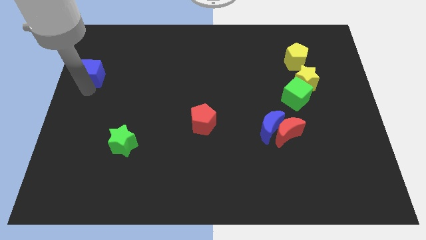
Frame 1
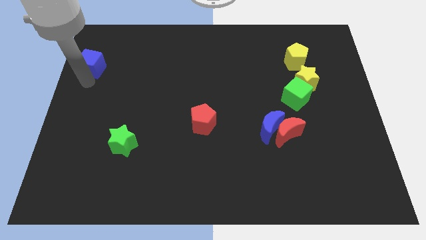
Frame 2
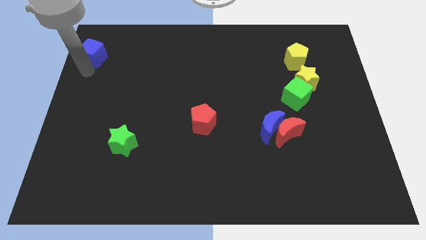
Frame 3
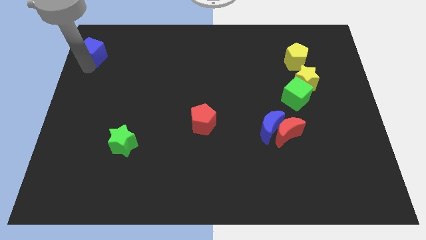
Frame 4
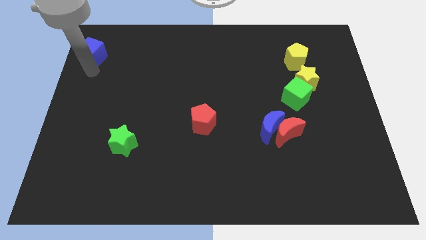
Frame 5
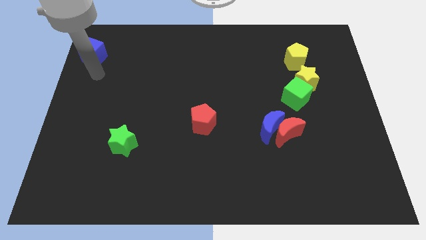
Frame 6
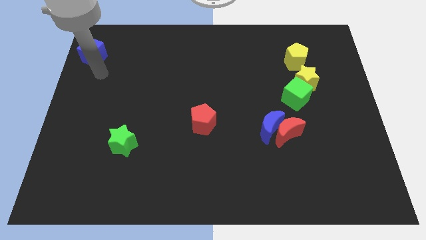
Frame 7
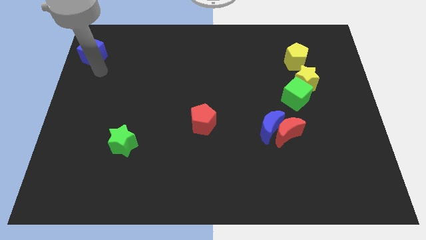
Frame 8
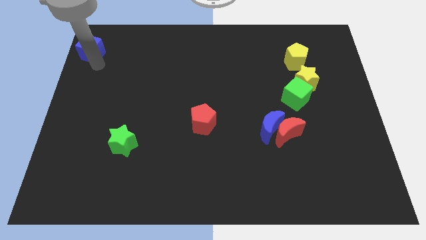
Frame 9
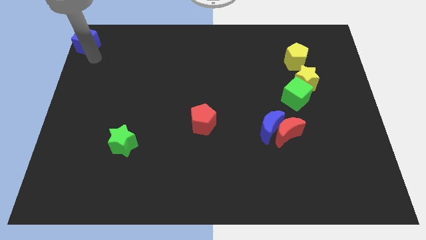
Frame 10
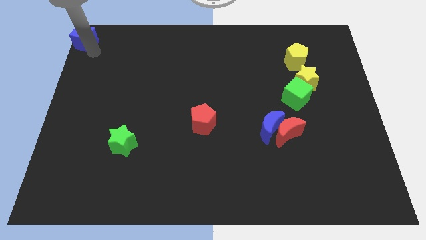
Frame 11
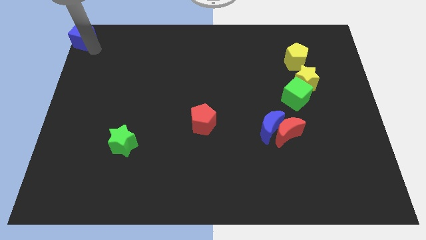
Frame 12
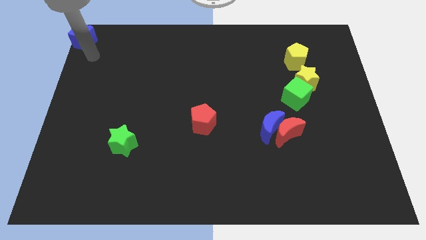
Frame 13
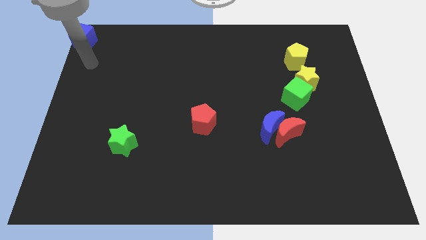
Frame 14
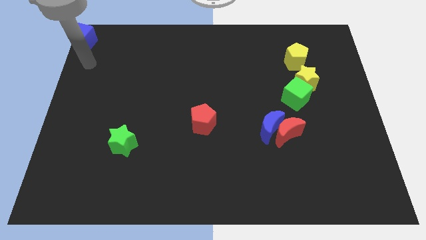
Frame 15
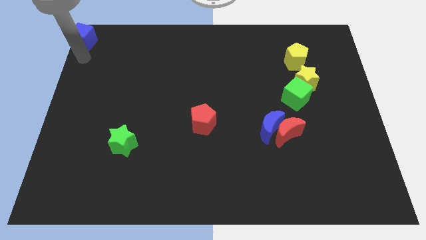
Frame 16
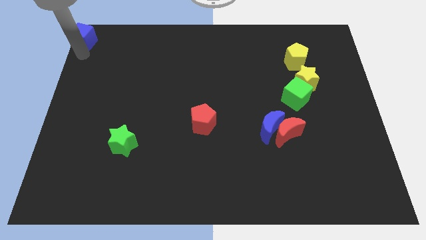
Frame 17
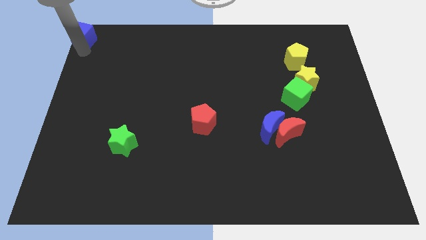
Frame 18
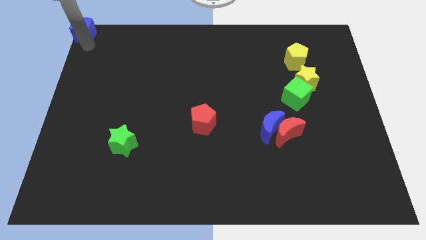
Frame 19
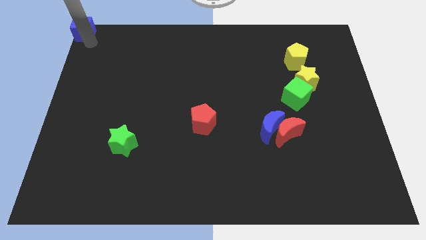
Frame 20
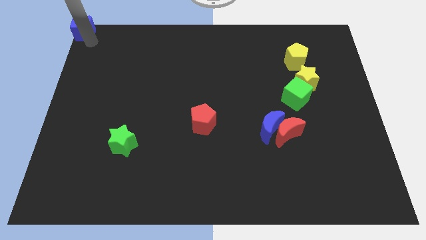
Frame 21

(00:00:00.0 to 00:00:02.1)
push the blue cube to the top left corner of the board

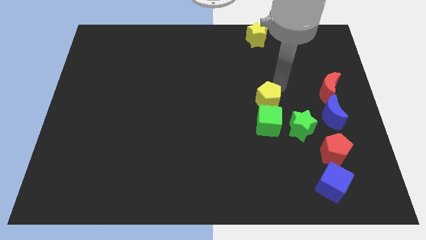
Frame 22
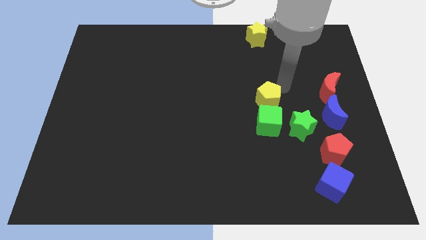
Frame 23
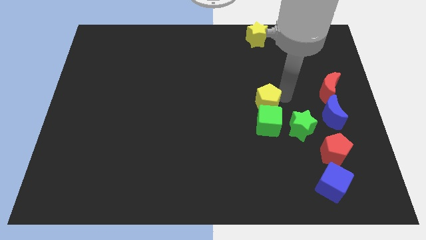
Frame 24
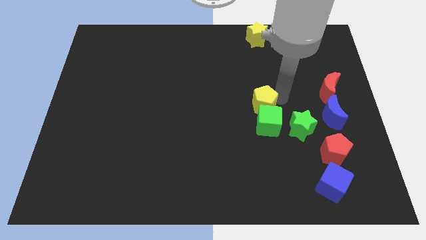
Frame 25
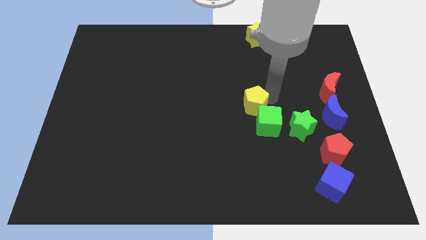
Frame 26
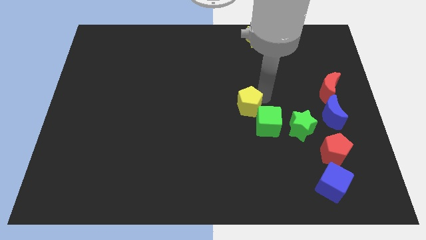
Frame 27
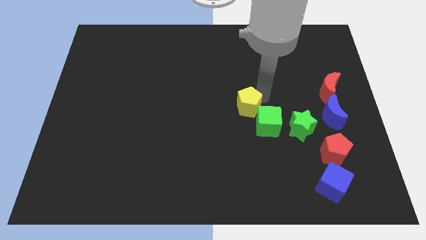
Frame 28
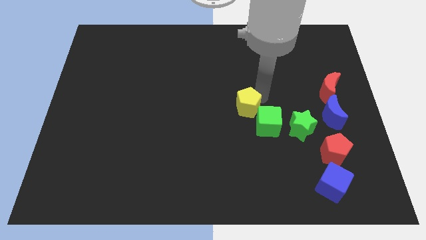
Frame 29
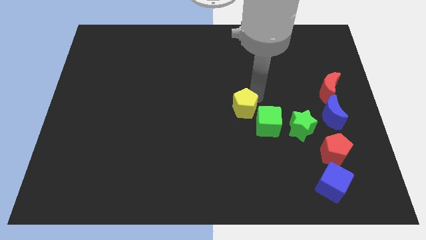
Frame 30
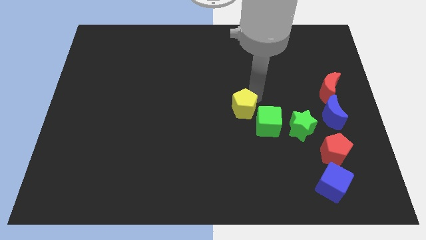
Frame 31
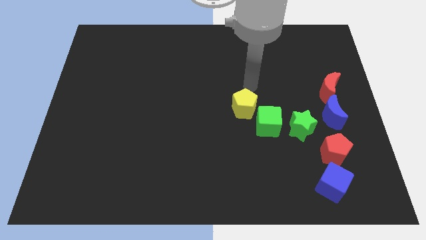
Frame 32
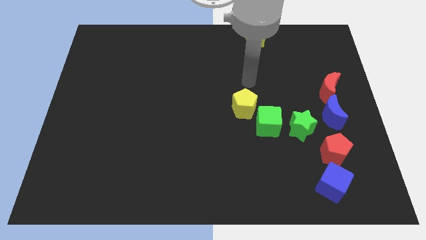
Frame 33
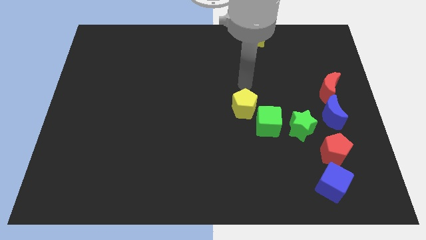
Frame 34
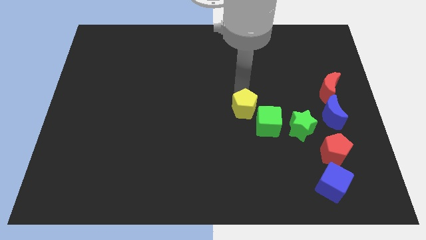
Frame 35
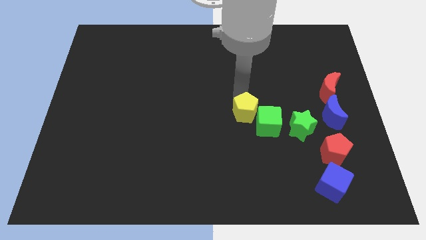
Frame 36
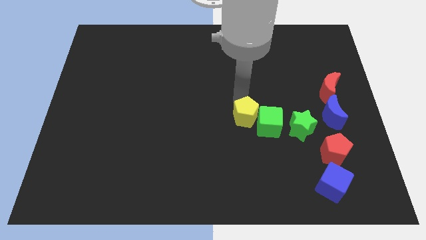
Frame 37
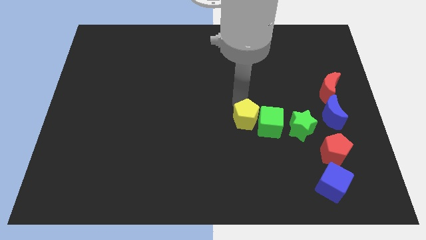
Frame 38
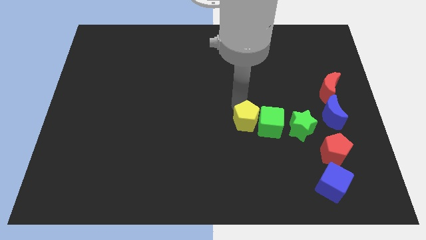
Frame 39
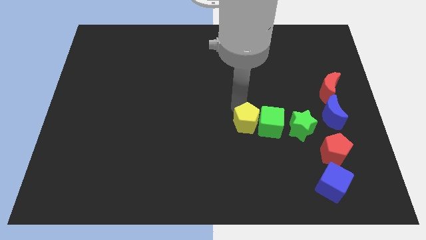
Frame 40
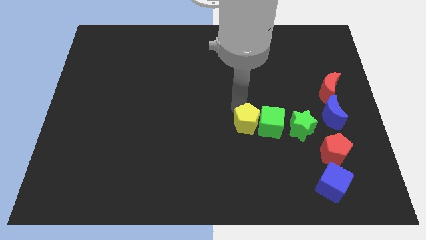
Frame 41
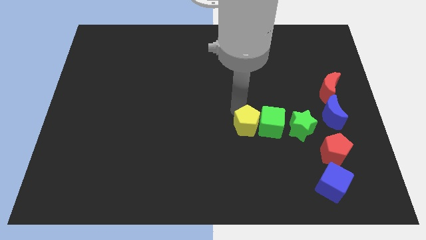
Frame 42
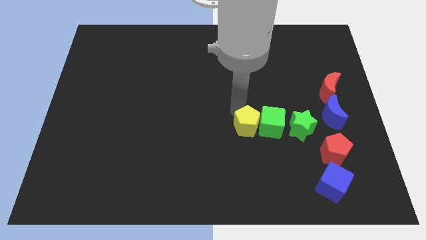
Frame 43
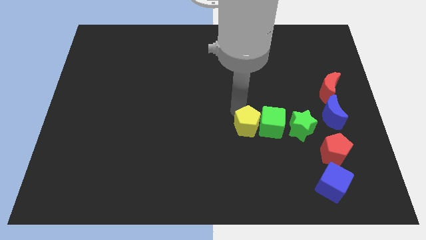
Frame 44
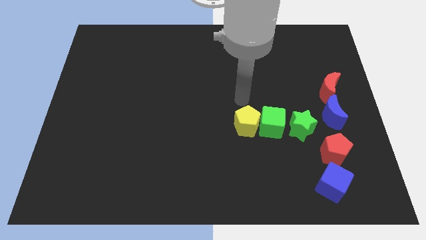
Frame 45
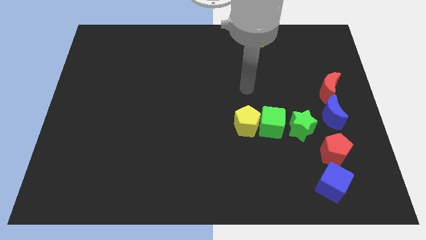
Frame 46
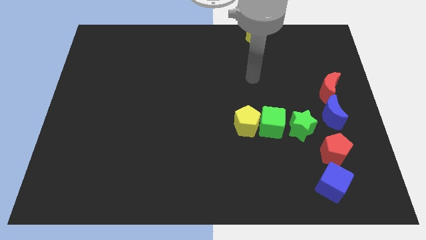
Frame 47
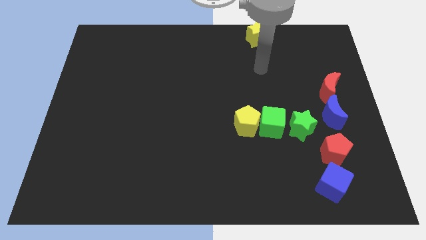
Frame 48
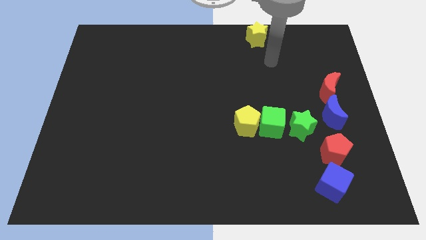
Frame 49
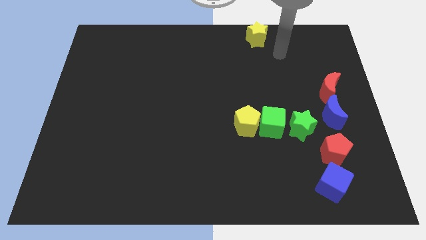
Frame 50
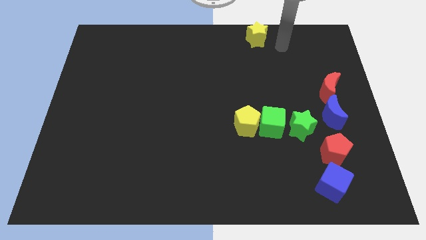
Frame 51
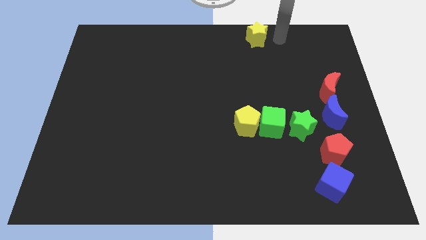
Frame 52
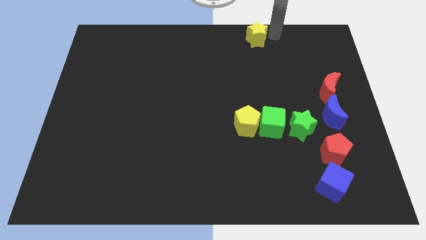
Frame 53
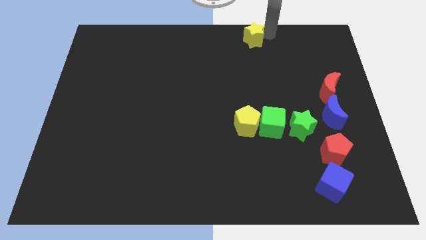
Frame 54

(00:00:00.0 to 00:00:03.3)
move the yellow pentagon left to the green cube

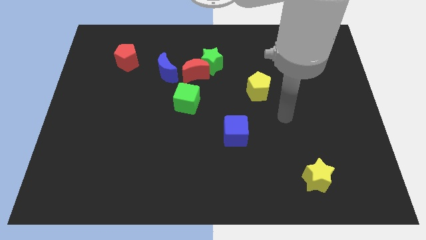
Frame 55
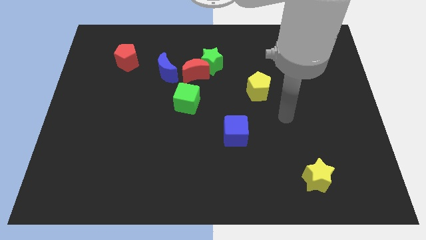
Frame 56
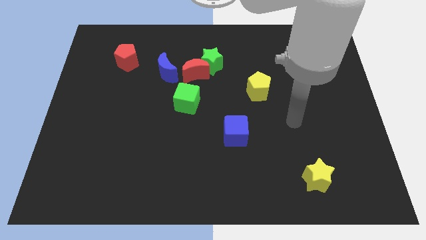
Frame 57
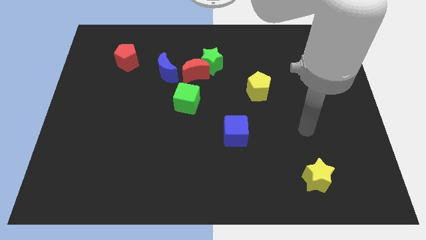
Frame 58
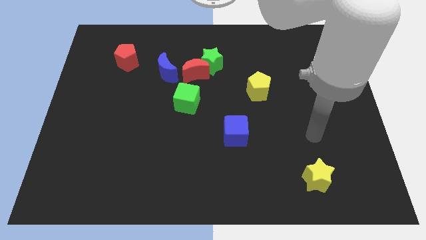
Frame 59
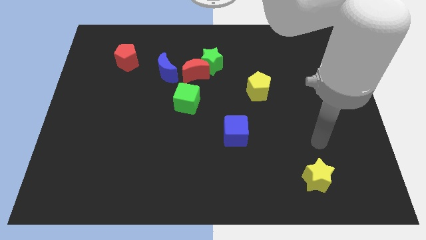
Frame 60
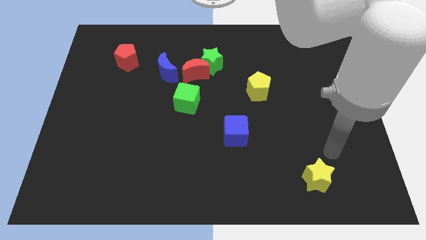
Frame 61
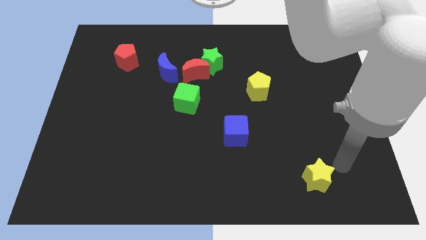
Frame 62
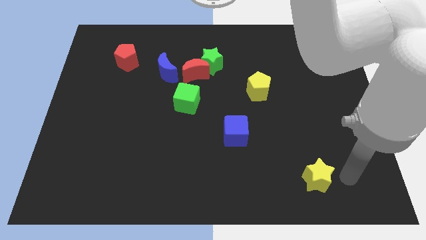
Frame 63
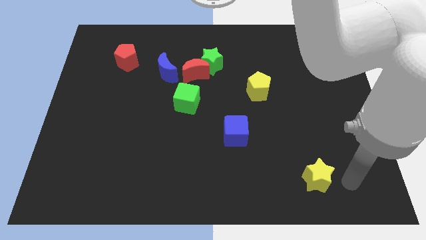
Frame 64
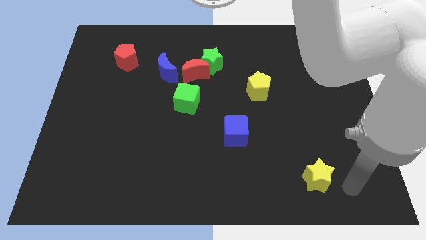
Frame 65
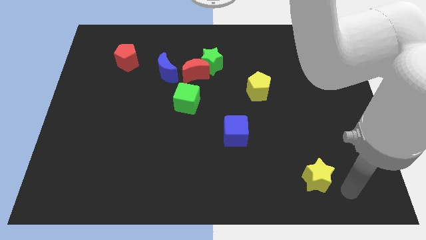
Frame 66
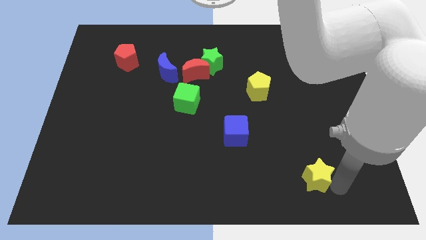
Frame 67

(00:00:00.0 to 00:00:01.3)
place the arm to the right side of the yellow star

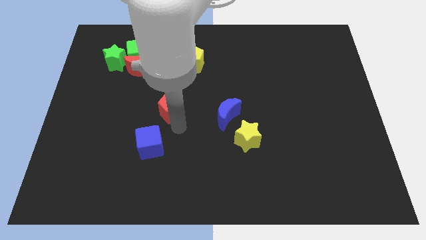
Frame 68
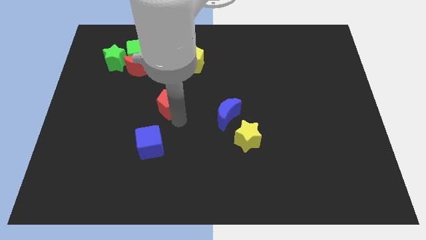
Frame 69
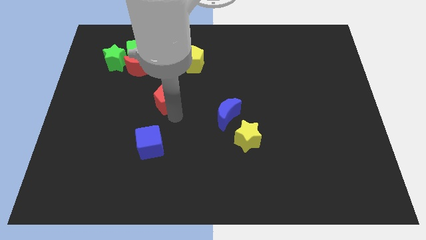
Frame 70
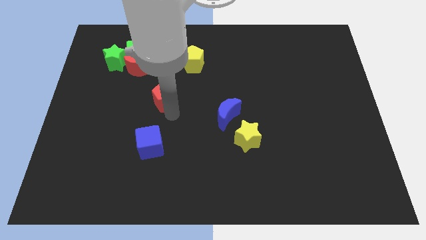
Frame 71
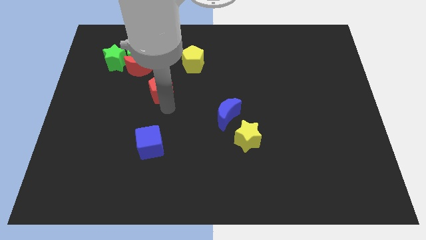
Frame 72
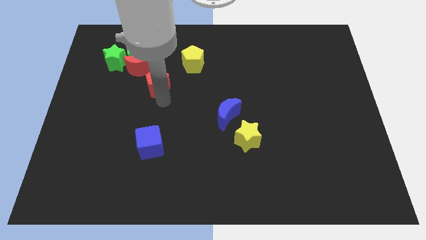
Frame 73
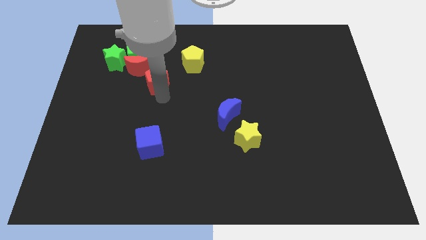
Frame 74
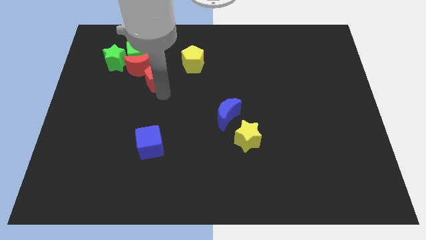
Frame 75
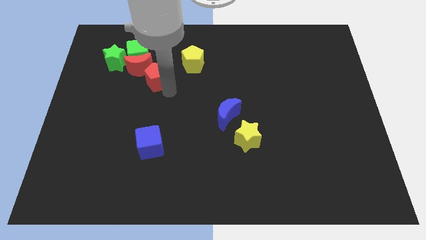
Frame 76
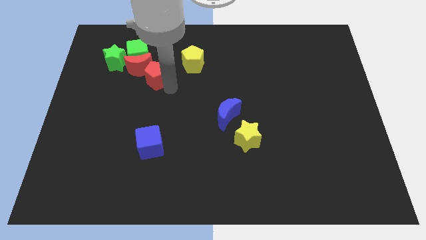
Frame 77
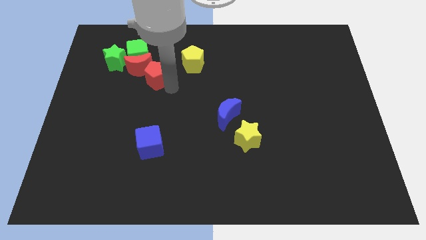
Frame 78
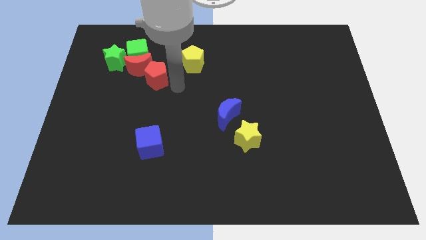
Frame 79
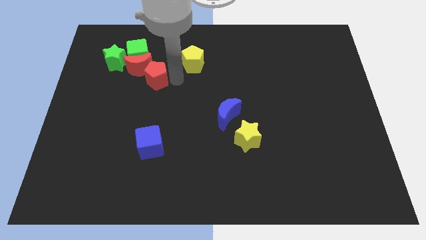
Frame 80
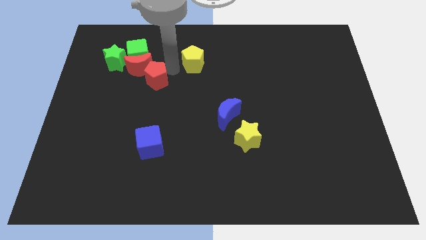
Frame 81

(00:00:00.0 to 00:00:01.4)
place red pentagon close to the red moon

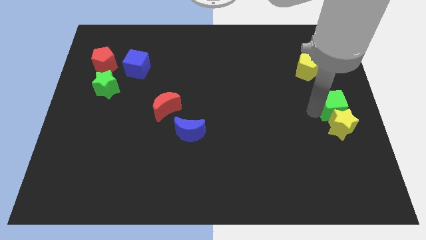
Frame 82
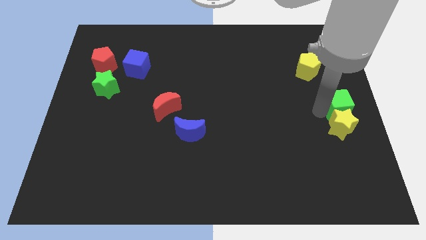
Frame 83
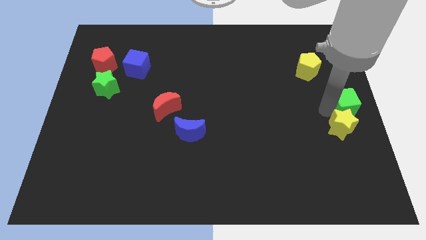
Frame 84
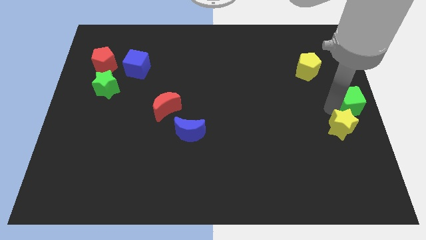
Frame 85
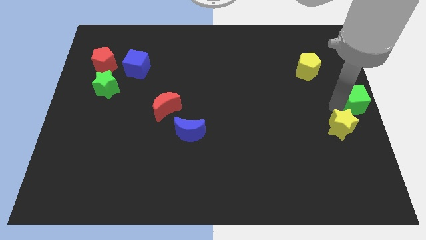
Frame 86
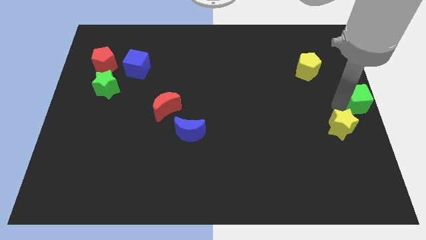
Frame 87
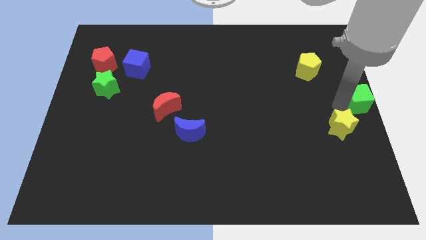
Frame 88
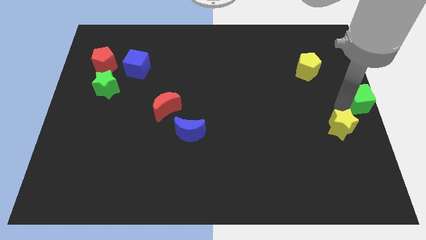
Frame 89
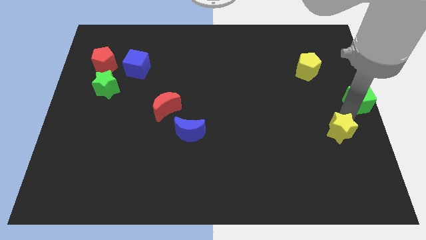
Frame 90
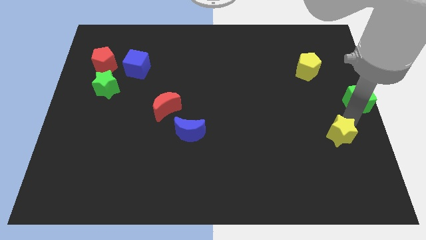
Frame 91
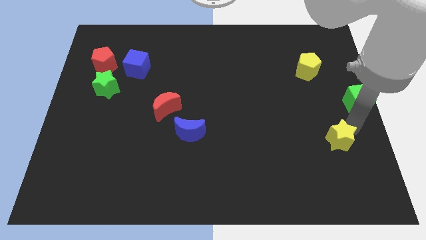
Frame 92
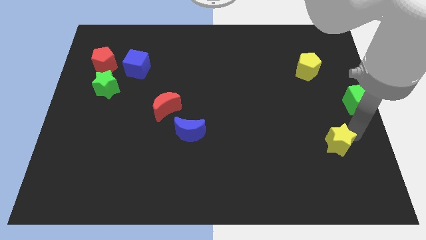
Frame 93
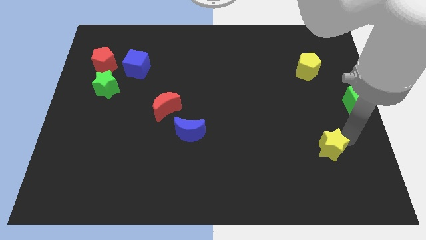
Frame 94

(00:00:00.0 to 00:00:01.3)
separate the yellow star and the green cube
